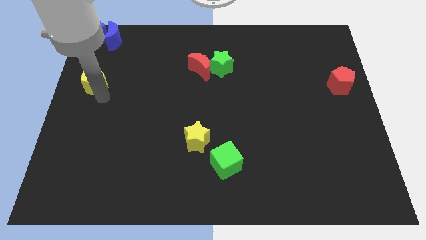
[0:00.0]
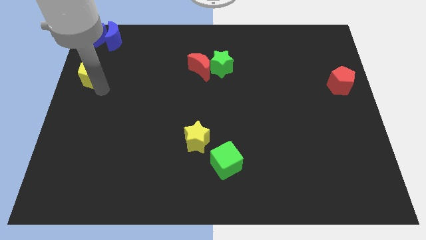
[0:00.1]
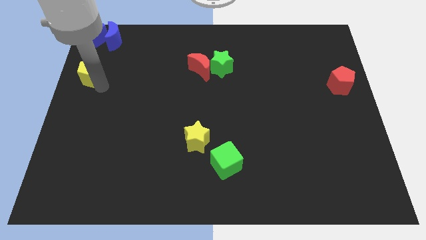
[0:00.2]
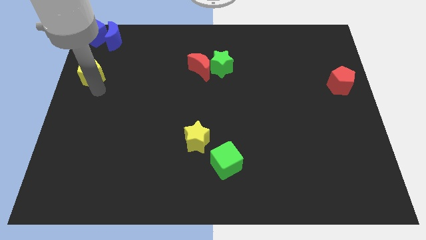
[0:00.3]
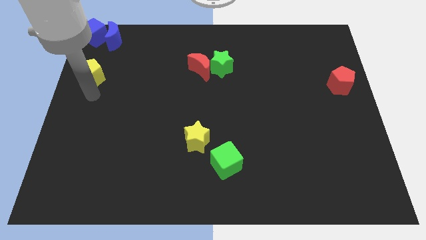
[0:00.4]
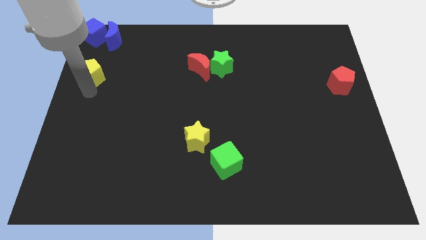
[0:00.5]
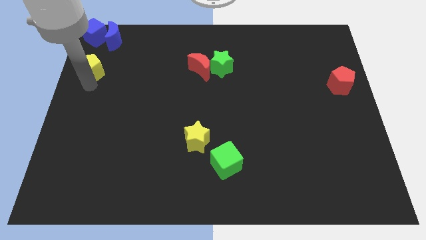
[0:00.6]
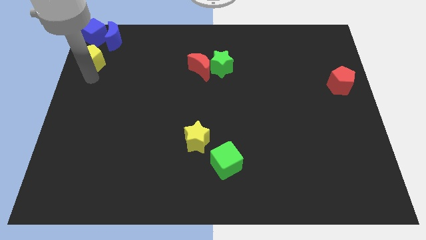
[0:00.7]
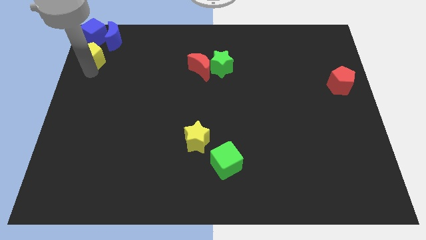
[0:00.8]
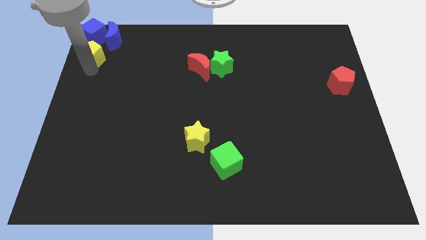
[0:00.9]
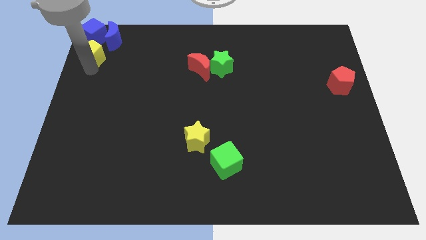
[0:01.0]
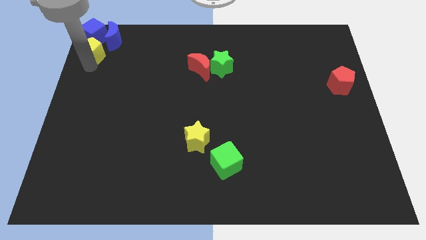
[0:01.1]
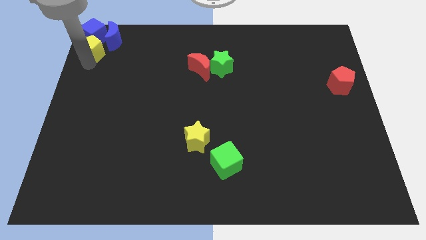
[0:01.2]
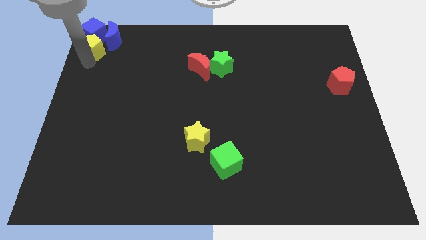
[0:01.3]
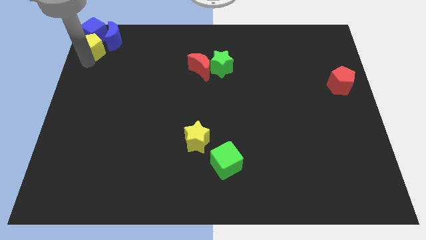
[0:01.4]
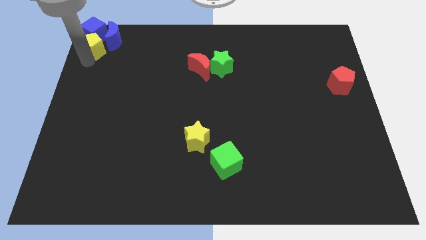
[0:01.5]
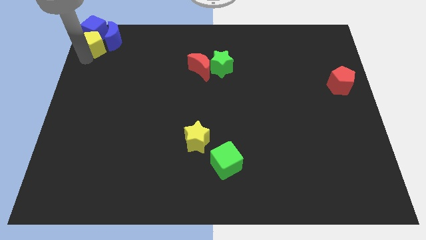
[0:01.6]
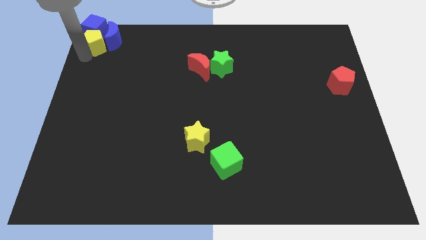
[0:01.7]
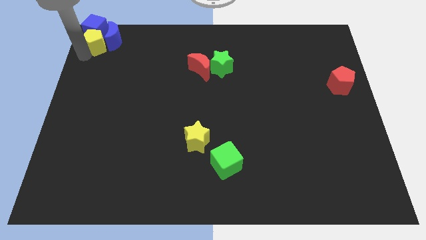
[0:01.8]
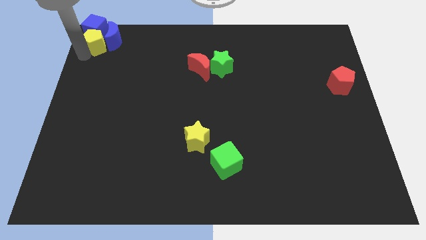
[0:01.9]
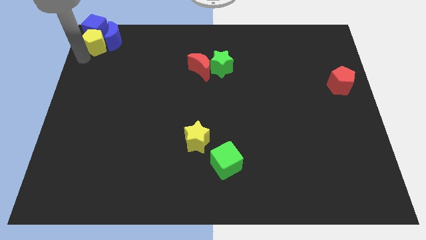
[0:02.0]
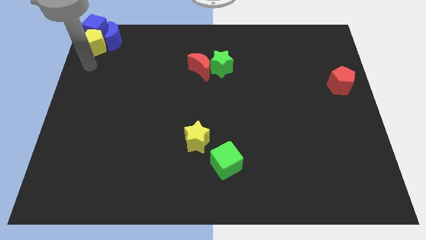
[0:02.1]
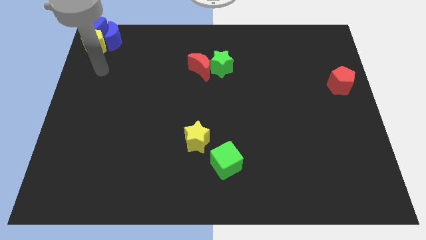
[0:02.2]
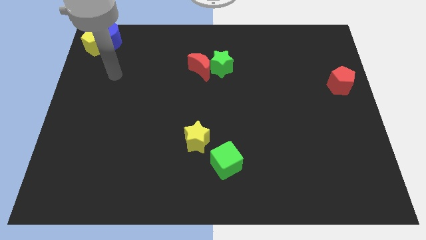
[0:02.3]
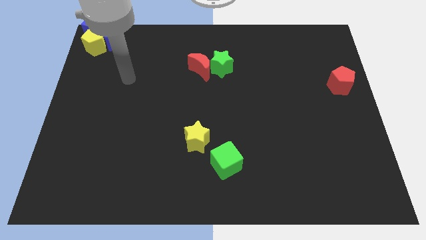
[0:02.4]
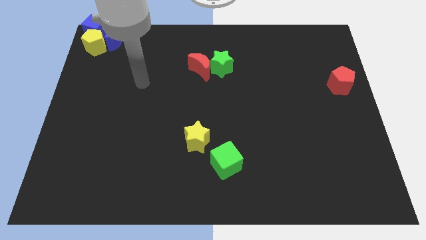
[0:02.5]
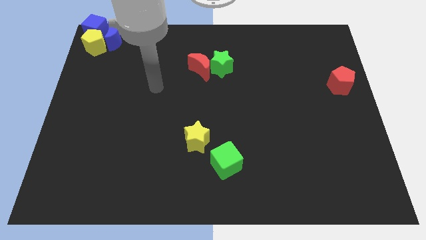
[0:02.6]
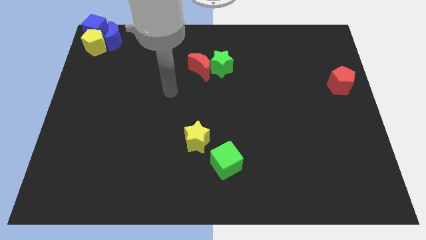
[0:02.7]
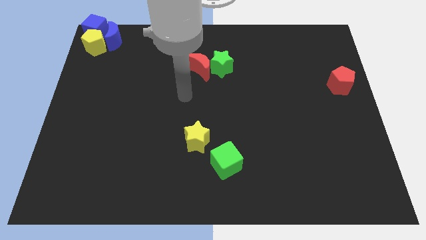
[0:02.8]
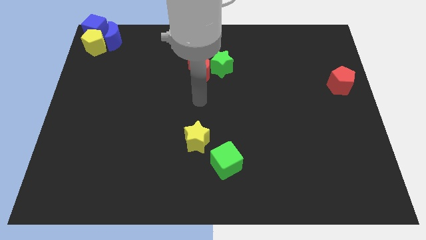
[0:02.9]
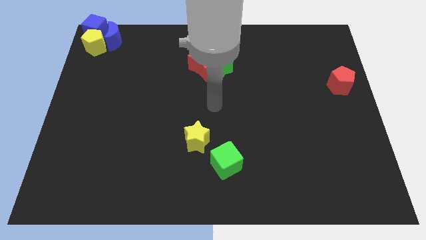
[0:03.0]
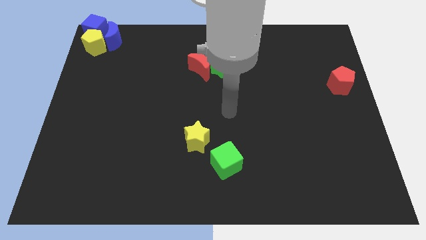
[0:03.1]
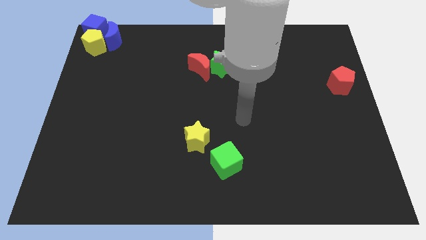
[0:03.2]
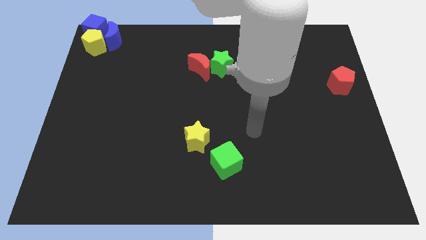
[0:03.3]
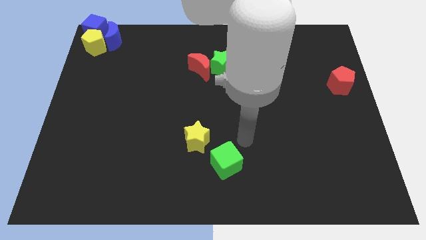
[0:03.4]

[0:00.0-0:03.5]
push the yellow pentagon into the blue cube

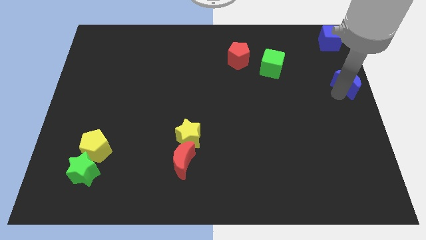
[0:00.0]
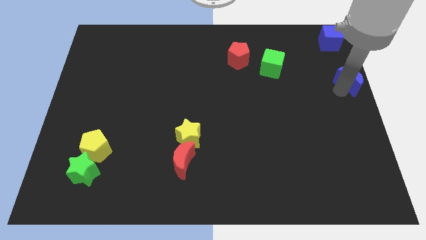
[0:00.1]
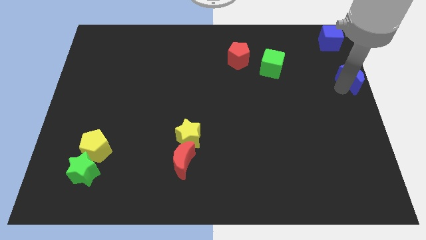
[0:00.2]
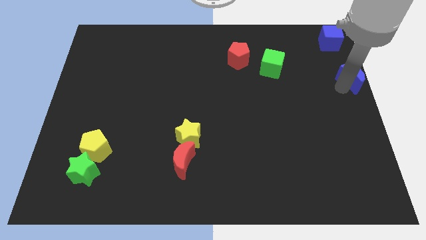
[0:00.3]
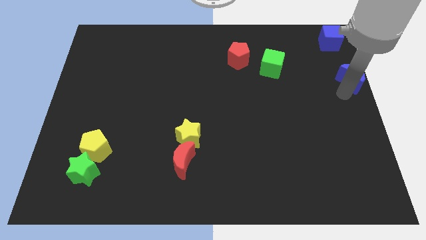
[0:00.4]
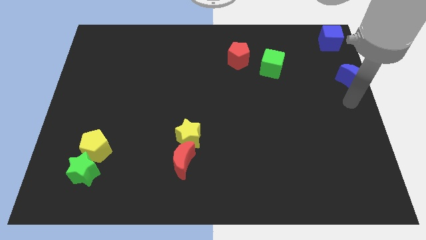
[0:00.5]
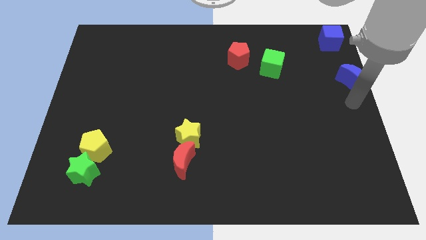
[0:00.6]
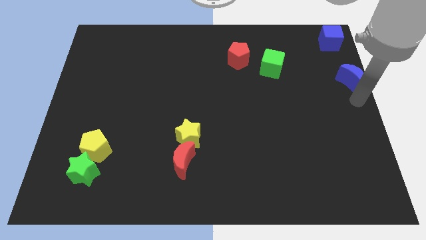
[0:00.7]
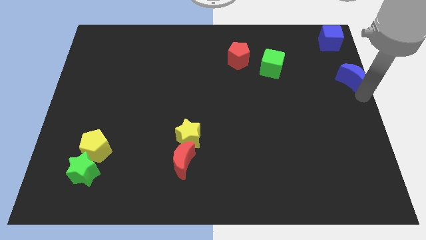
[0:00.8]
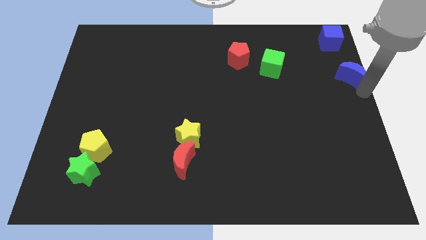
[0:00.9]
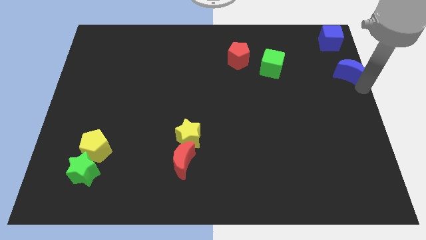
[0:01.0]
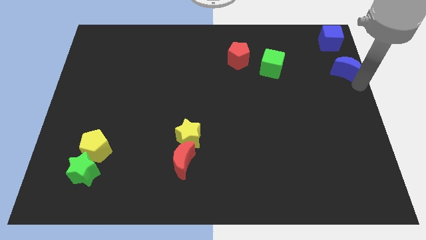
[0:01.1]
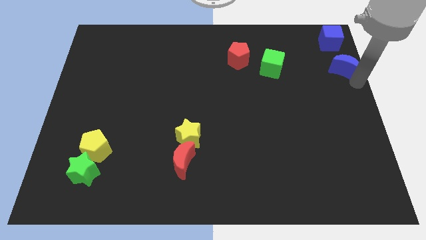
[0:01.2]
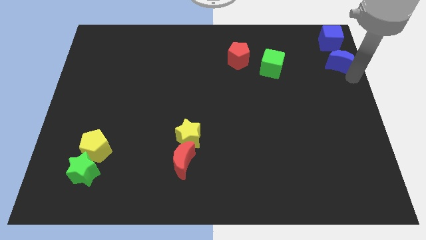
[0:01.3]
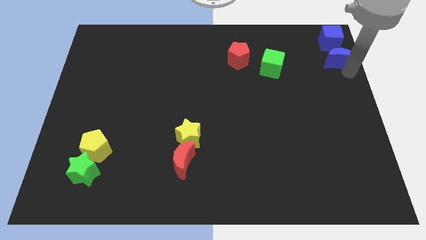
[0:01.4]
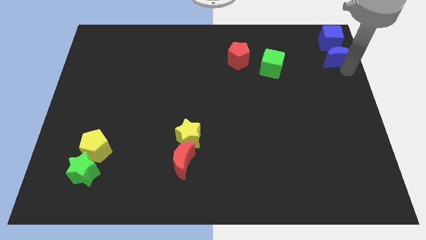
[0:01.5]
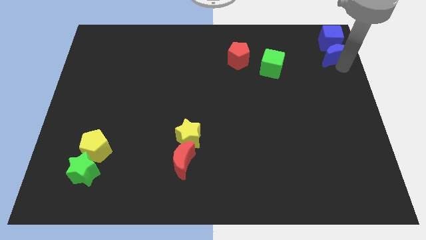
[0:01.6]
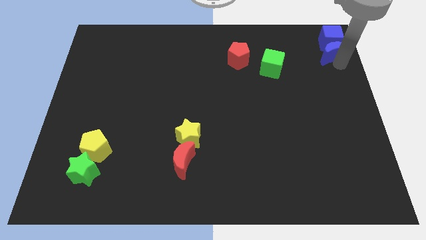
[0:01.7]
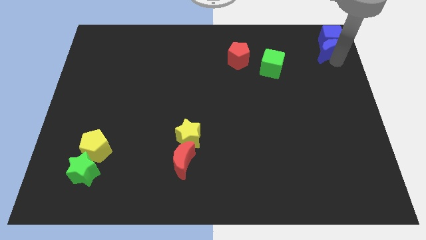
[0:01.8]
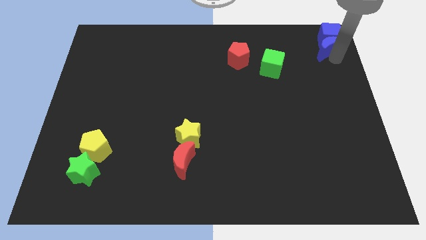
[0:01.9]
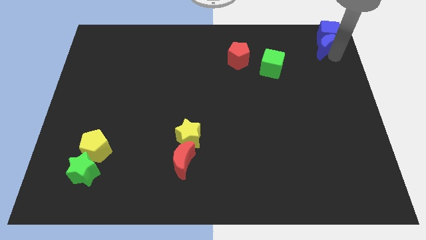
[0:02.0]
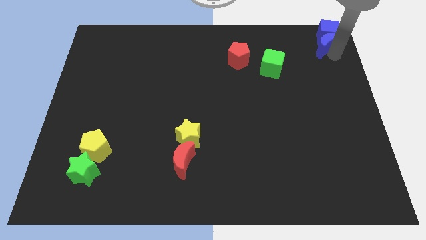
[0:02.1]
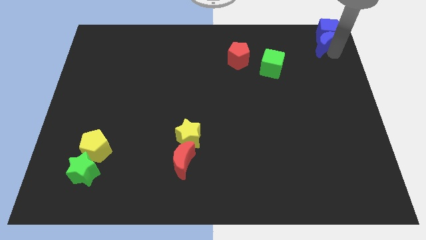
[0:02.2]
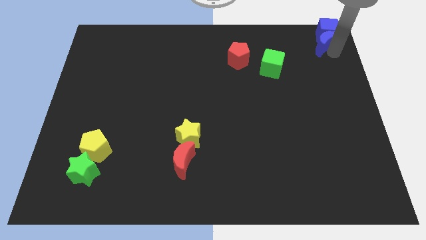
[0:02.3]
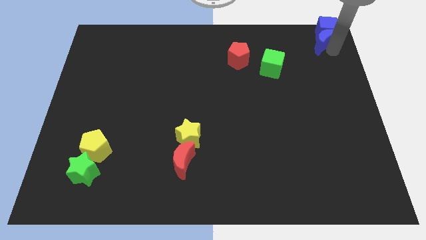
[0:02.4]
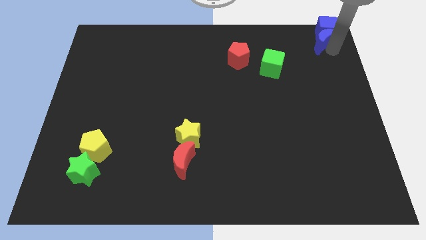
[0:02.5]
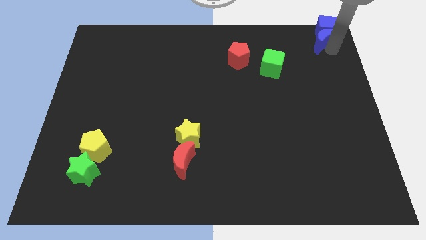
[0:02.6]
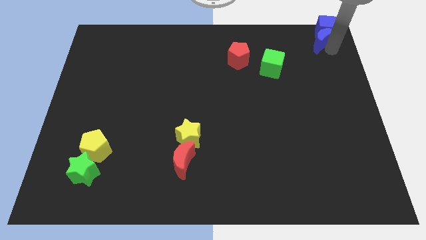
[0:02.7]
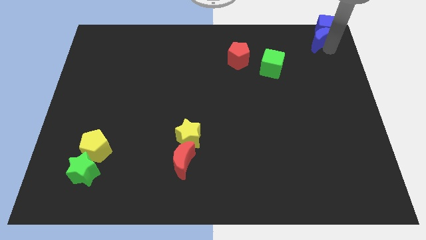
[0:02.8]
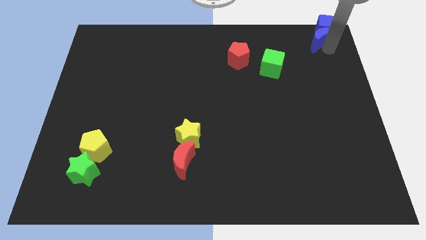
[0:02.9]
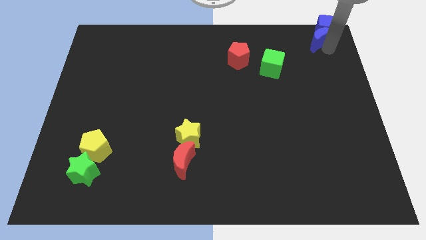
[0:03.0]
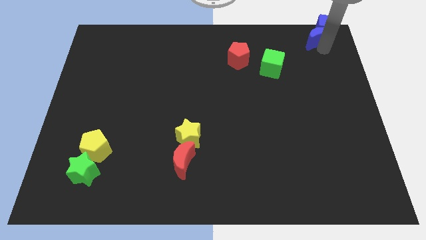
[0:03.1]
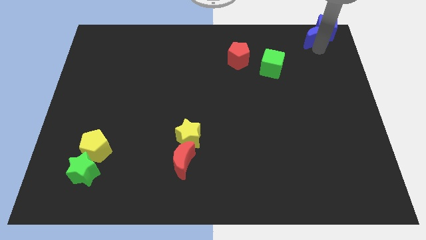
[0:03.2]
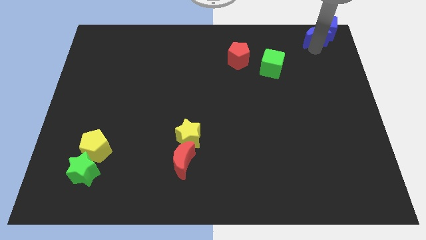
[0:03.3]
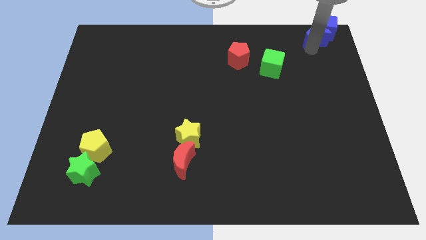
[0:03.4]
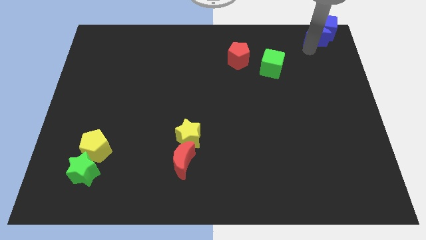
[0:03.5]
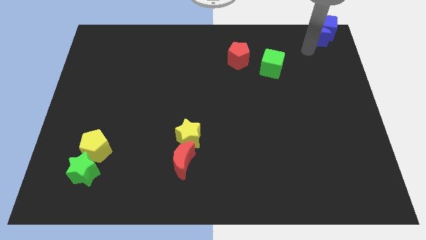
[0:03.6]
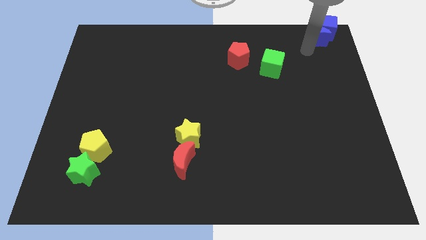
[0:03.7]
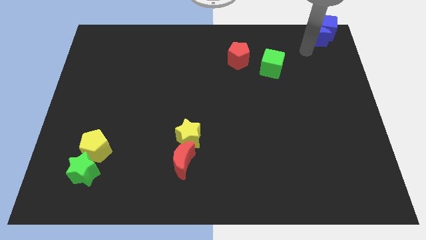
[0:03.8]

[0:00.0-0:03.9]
push the blue blocks towards the top right side of the table

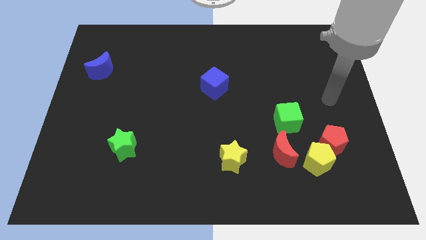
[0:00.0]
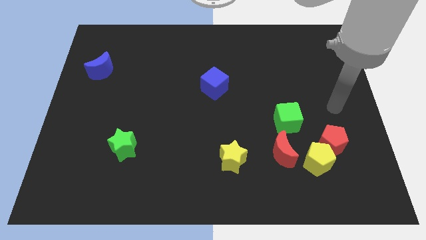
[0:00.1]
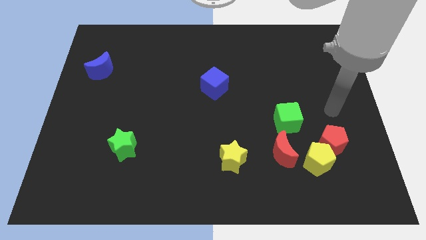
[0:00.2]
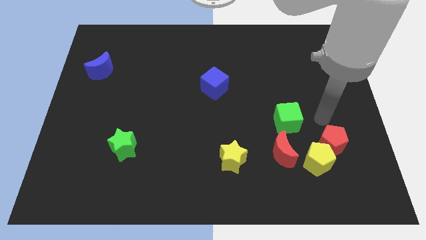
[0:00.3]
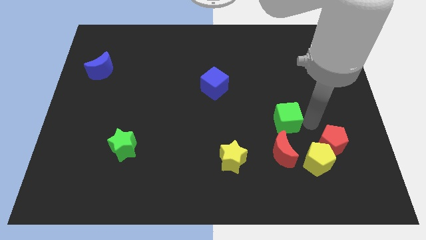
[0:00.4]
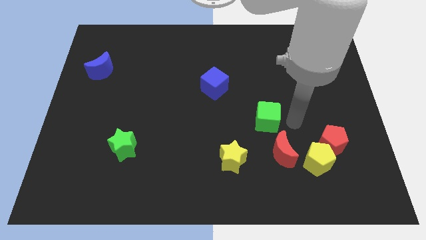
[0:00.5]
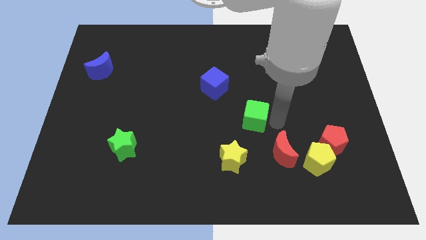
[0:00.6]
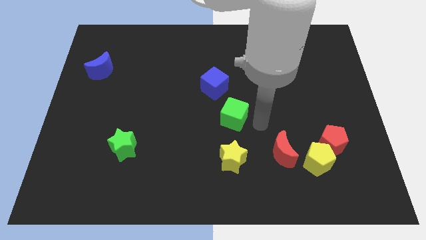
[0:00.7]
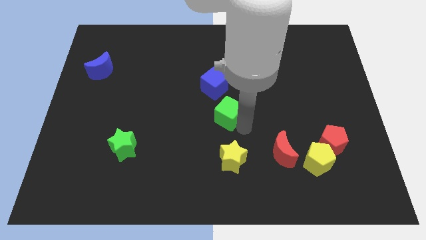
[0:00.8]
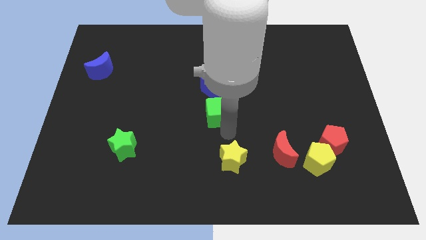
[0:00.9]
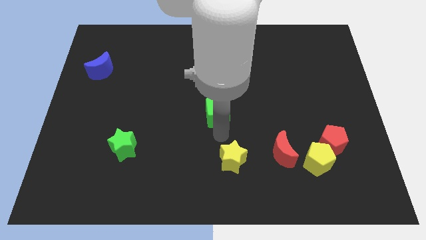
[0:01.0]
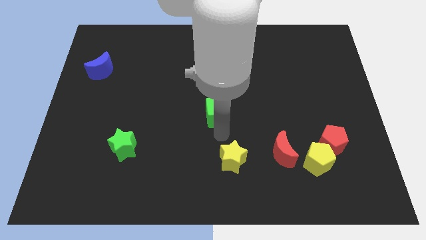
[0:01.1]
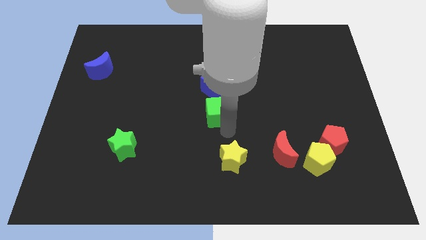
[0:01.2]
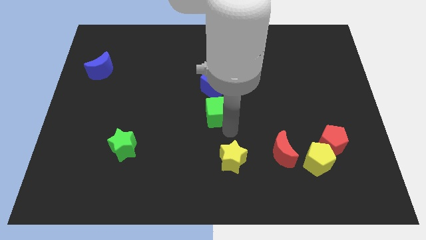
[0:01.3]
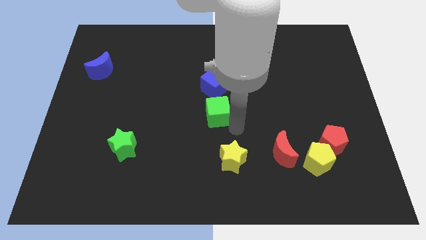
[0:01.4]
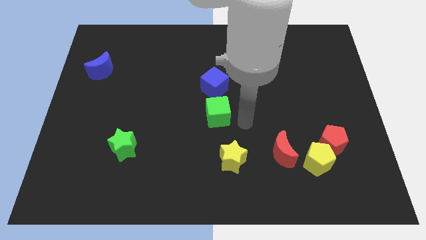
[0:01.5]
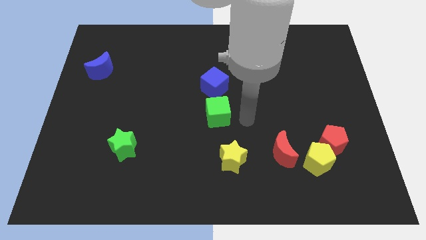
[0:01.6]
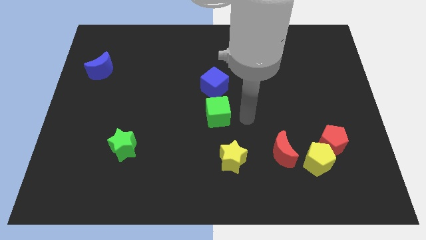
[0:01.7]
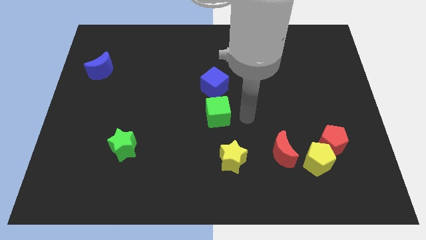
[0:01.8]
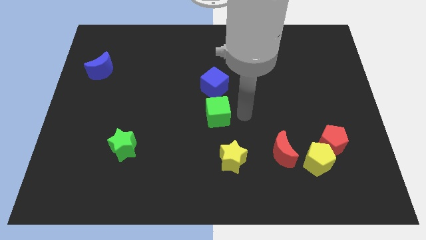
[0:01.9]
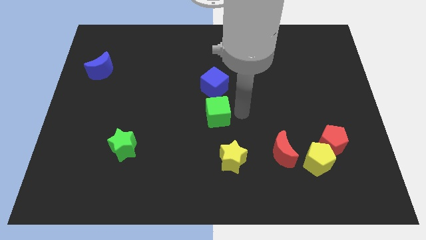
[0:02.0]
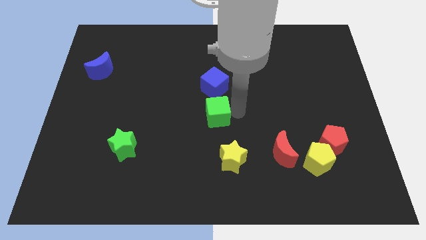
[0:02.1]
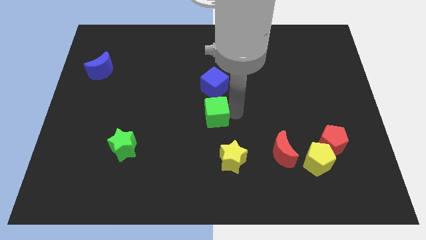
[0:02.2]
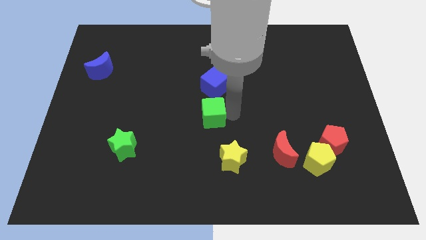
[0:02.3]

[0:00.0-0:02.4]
push the green cube closer to the green star
